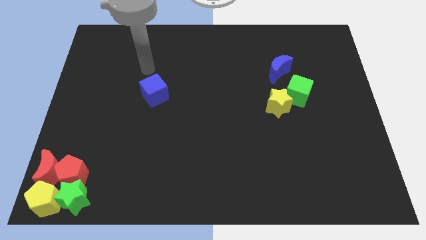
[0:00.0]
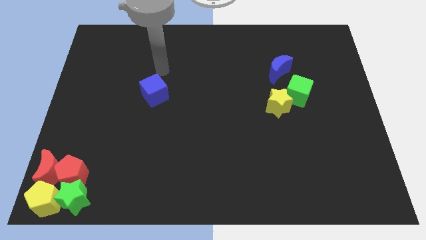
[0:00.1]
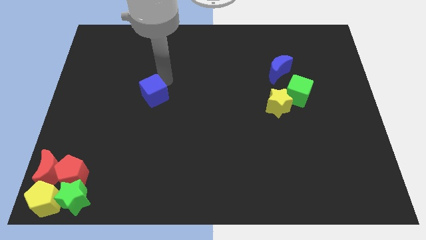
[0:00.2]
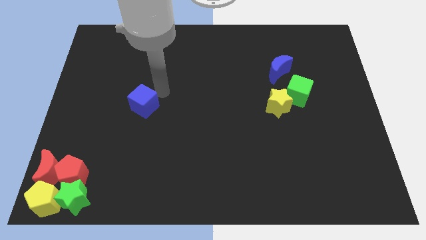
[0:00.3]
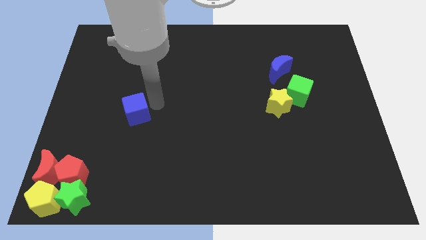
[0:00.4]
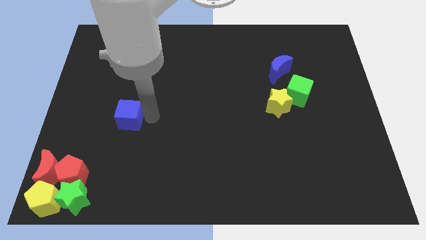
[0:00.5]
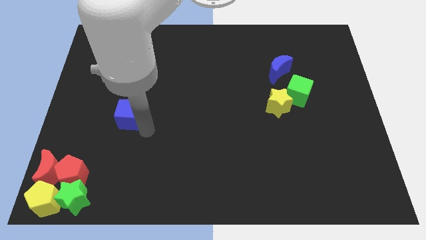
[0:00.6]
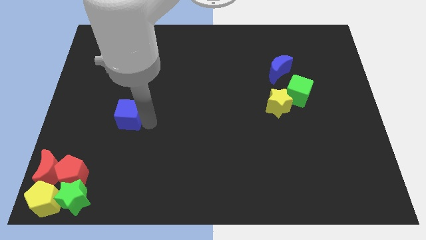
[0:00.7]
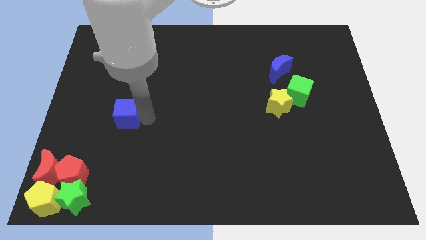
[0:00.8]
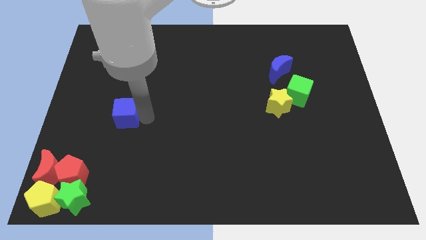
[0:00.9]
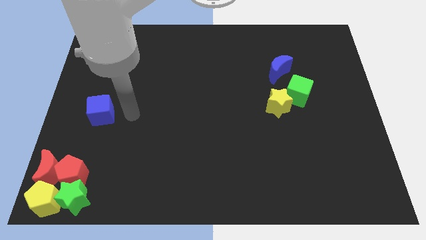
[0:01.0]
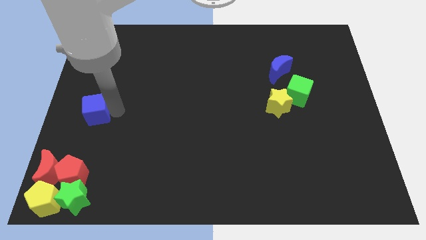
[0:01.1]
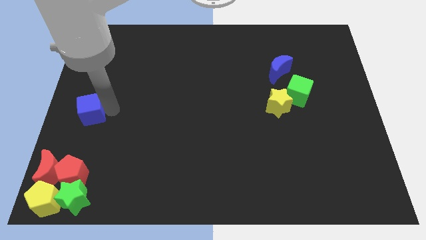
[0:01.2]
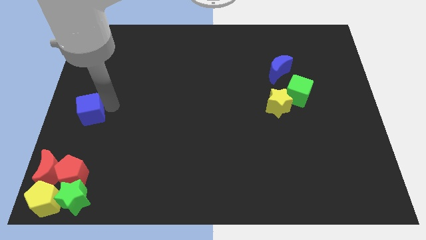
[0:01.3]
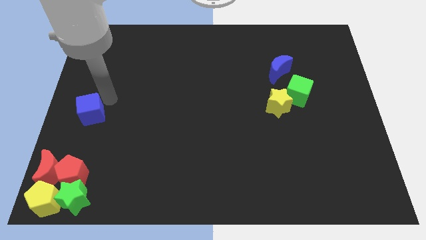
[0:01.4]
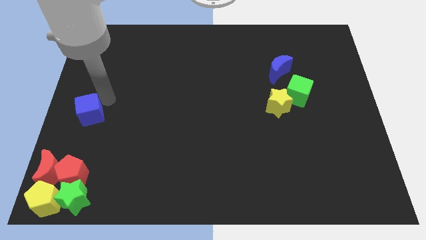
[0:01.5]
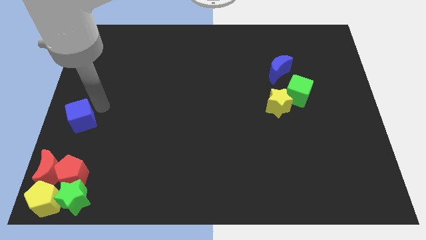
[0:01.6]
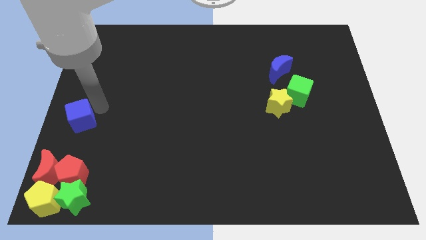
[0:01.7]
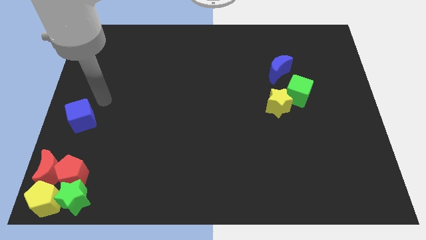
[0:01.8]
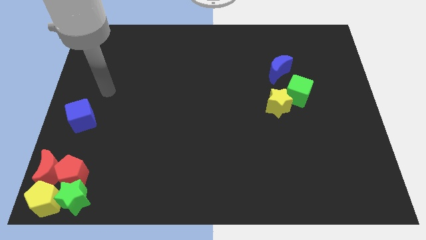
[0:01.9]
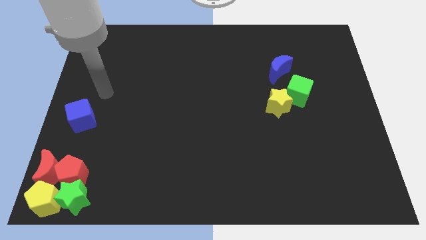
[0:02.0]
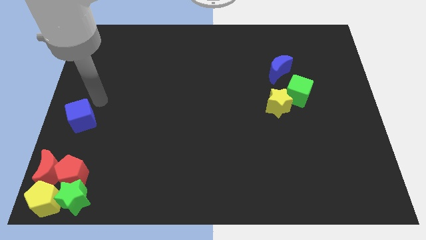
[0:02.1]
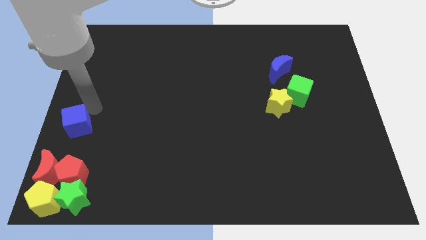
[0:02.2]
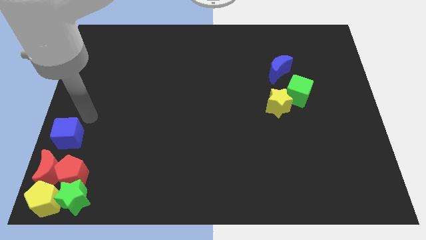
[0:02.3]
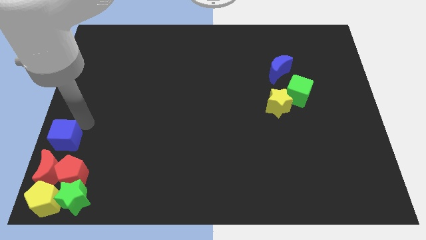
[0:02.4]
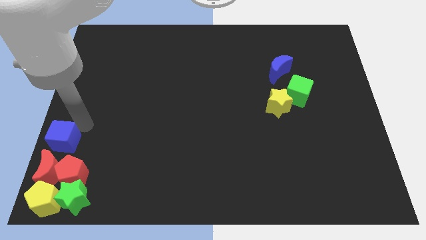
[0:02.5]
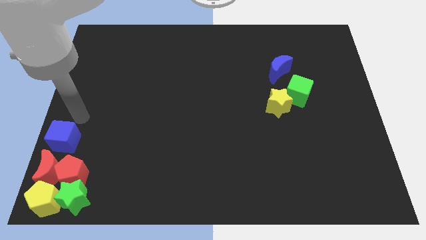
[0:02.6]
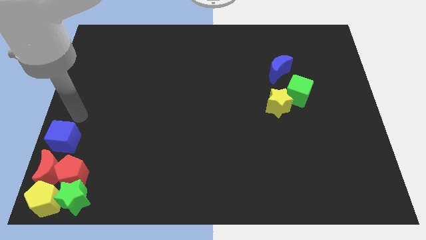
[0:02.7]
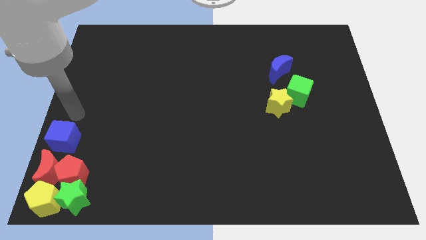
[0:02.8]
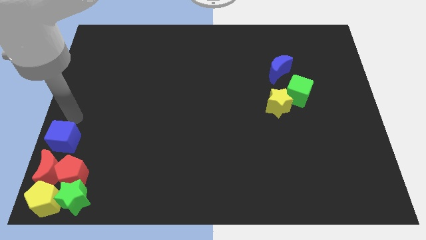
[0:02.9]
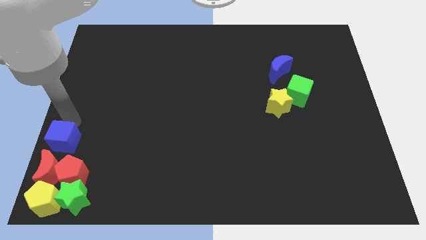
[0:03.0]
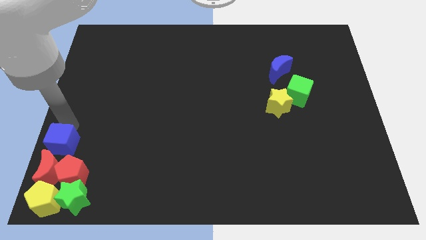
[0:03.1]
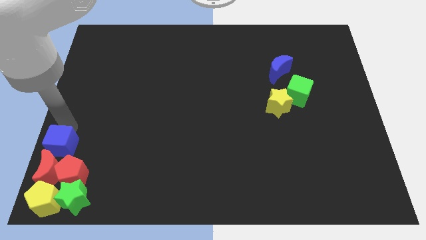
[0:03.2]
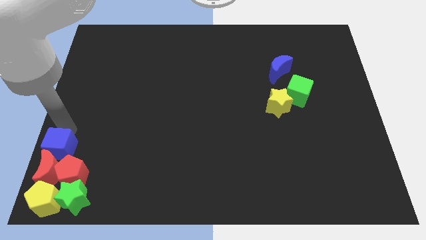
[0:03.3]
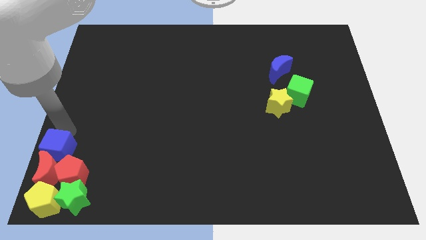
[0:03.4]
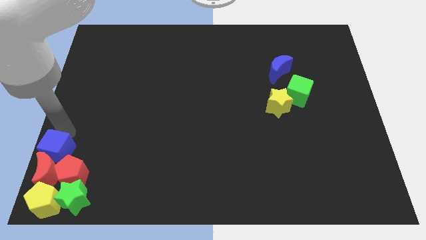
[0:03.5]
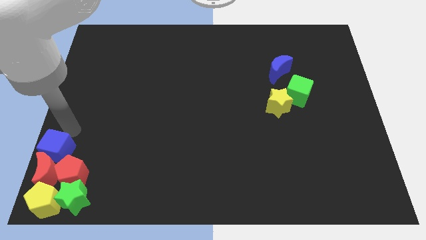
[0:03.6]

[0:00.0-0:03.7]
place the blue at the top of red crescent

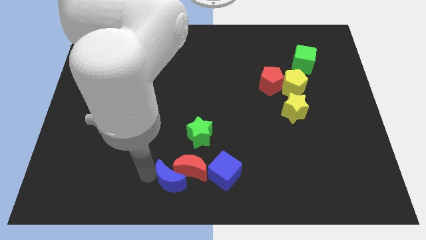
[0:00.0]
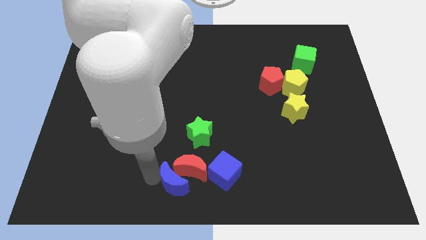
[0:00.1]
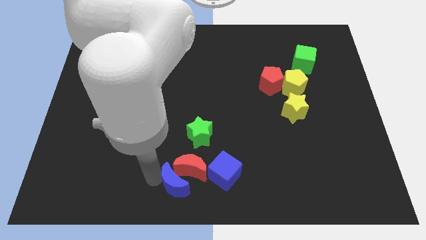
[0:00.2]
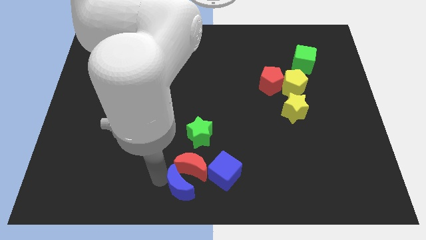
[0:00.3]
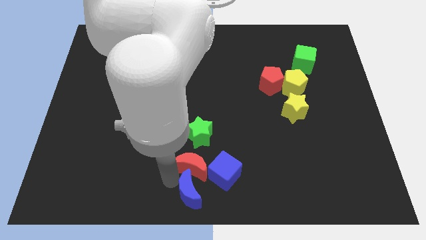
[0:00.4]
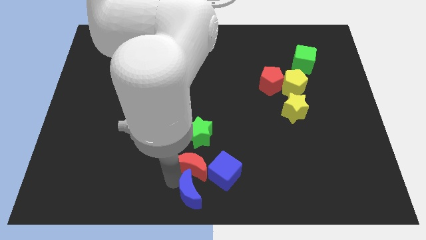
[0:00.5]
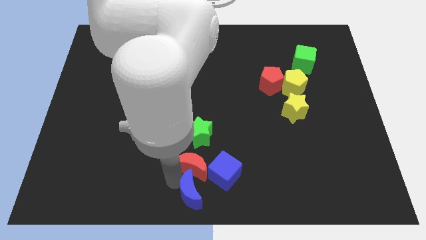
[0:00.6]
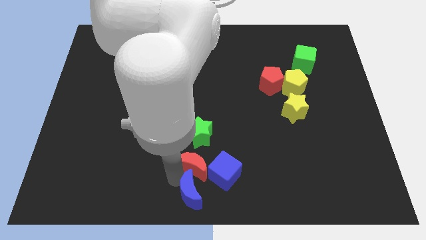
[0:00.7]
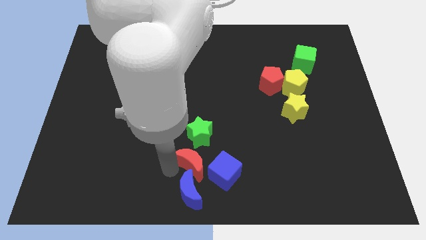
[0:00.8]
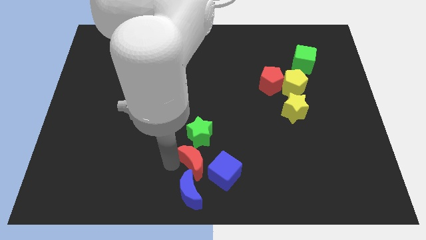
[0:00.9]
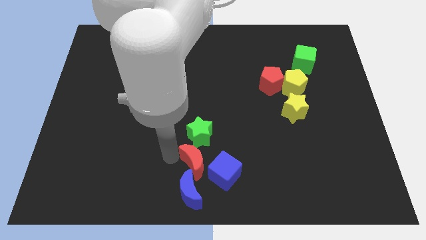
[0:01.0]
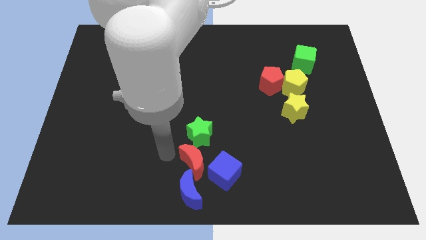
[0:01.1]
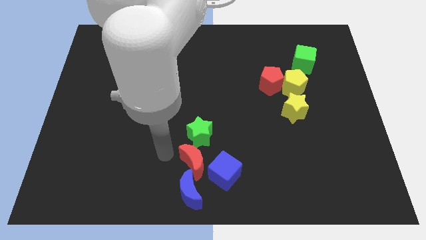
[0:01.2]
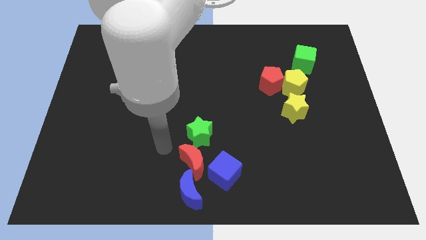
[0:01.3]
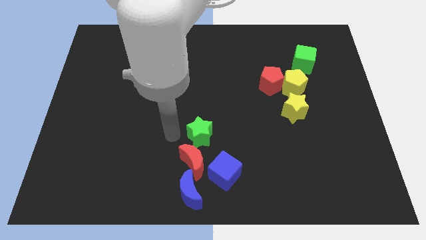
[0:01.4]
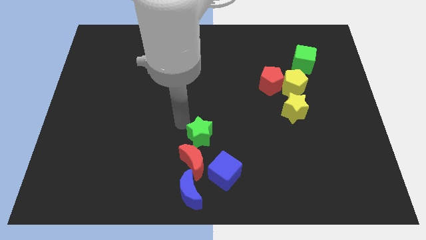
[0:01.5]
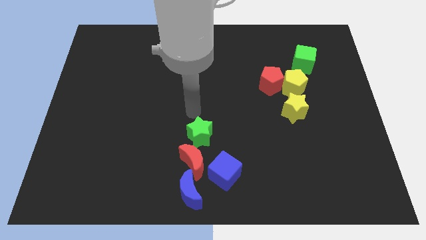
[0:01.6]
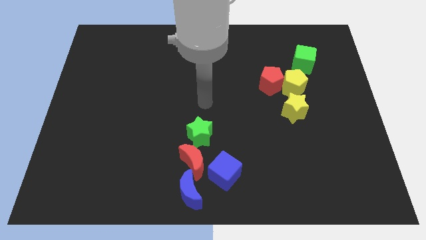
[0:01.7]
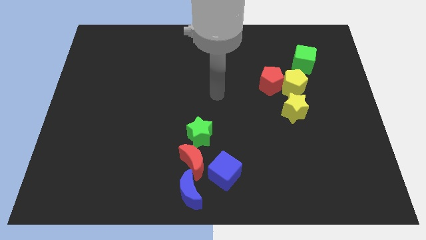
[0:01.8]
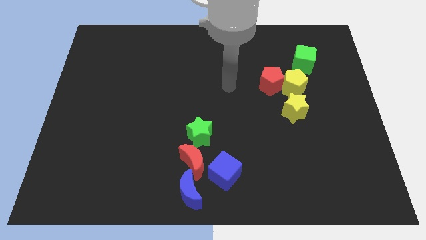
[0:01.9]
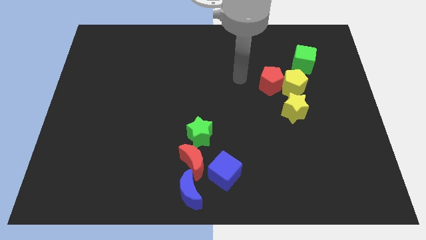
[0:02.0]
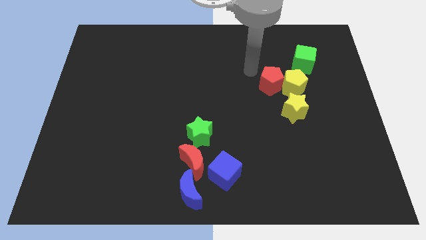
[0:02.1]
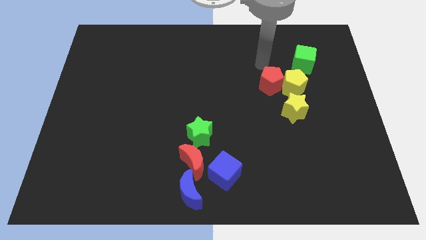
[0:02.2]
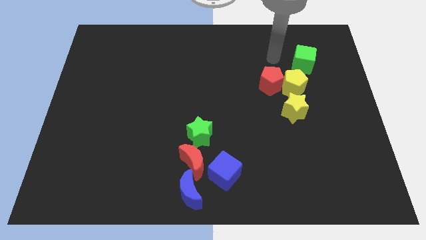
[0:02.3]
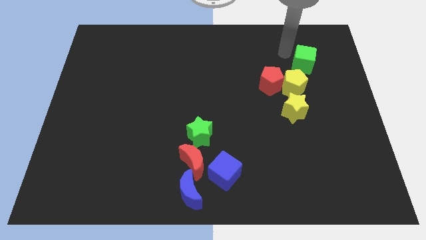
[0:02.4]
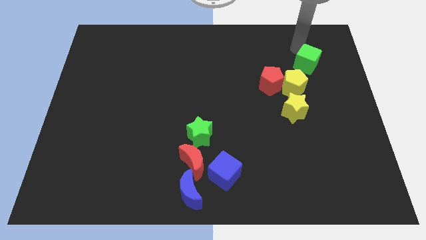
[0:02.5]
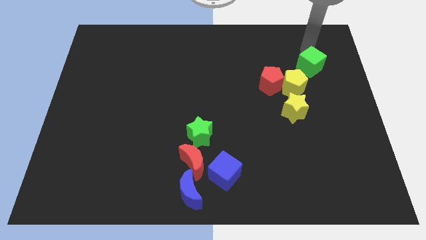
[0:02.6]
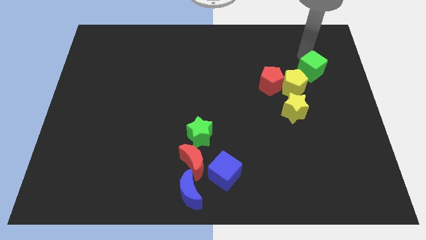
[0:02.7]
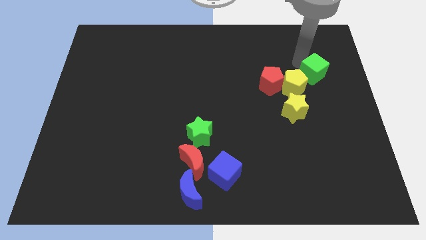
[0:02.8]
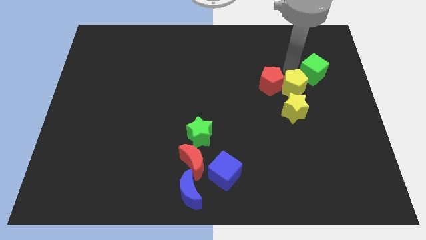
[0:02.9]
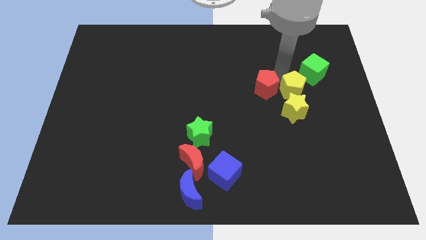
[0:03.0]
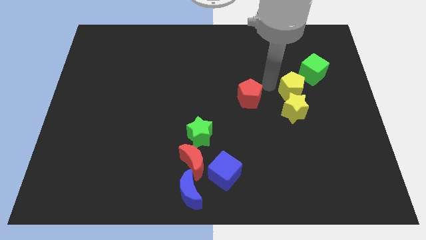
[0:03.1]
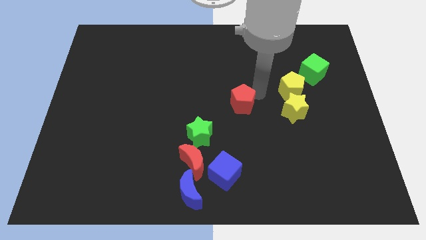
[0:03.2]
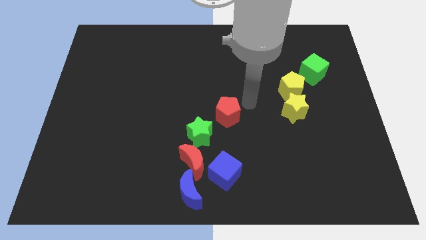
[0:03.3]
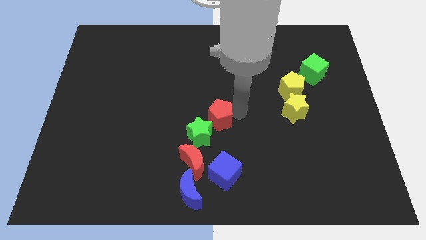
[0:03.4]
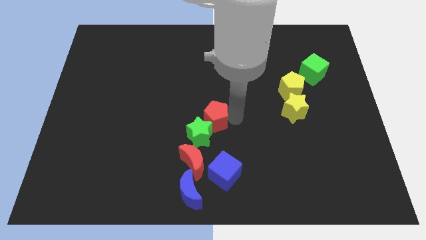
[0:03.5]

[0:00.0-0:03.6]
separate the red pentagon from the yellow pemtagon

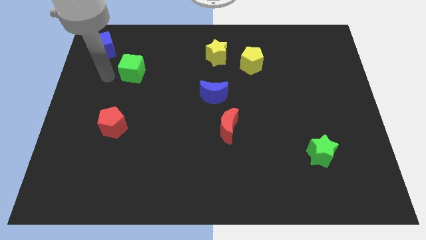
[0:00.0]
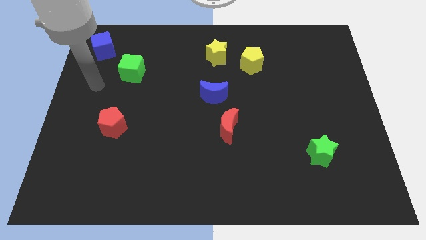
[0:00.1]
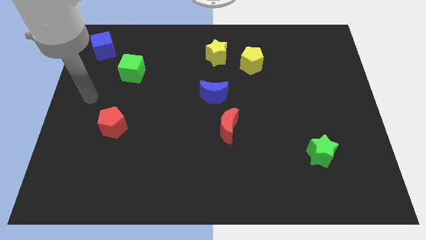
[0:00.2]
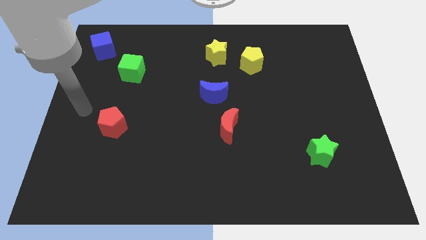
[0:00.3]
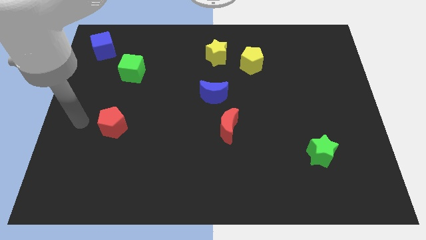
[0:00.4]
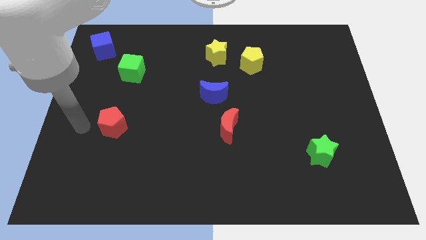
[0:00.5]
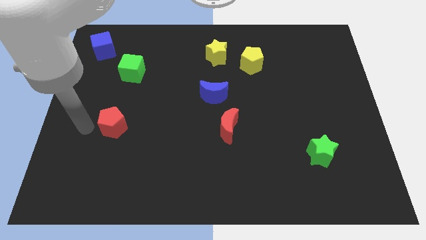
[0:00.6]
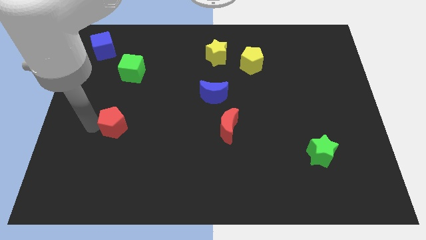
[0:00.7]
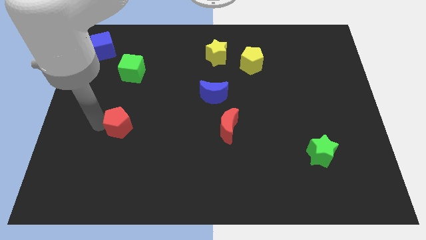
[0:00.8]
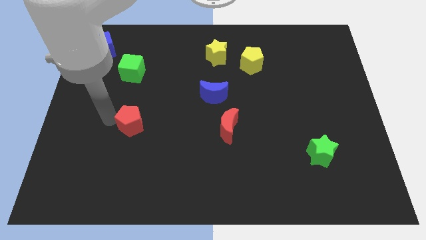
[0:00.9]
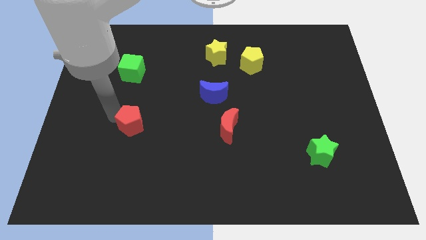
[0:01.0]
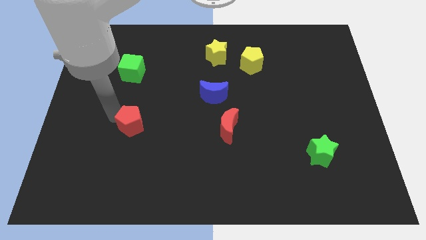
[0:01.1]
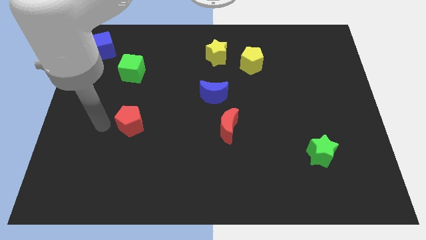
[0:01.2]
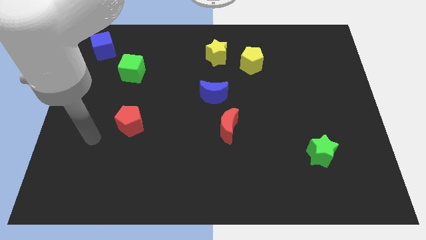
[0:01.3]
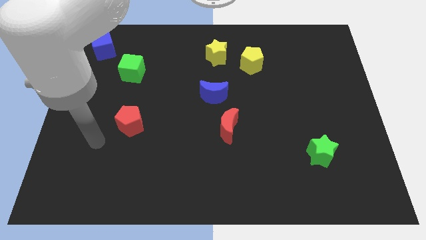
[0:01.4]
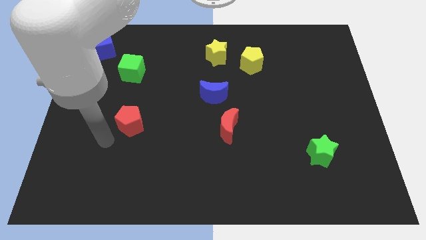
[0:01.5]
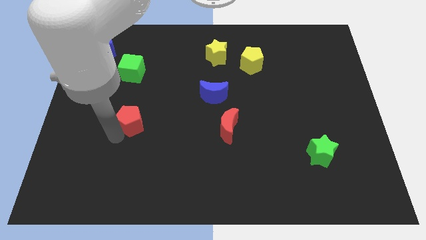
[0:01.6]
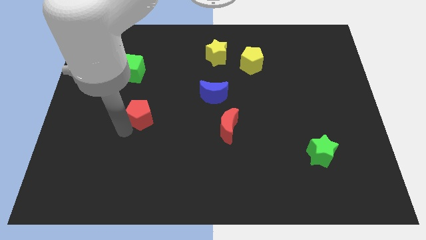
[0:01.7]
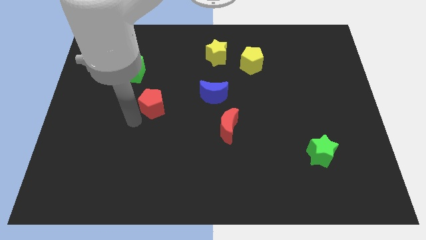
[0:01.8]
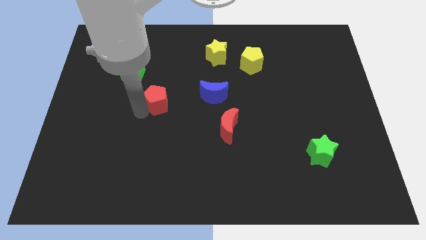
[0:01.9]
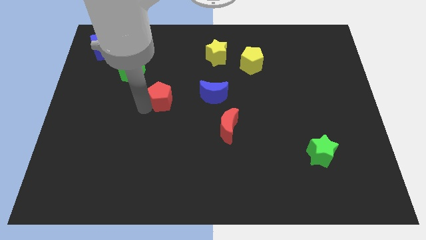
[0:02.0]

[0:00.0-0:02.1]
push the red pentagon upward
